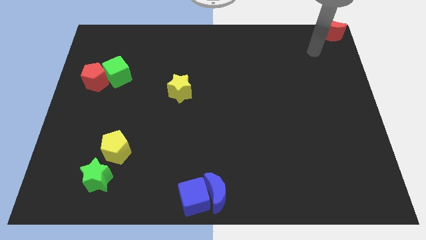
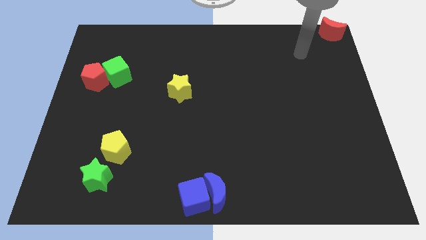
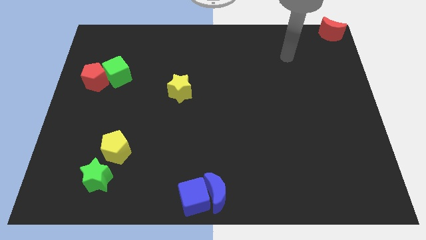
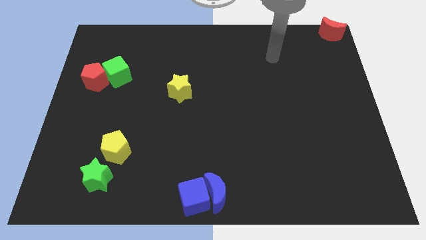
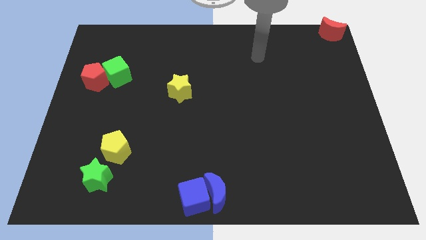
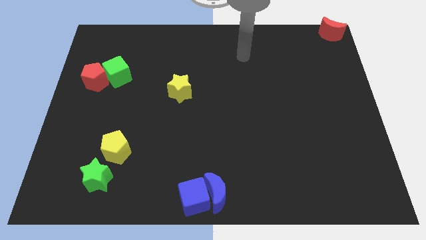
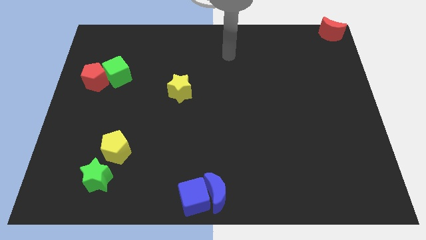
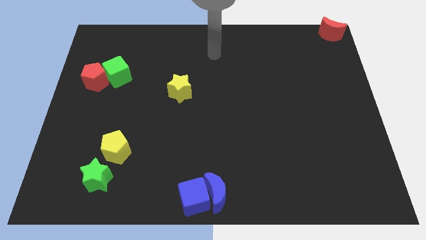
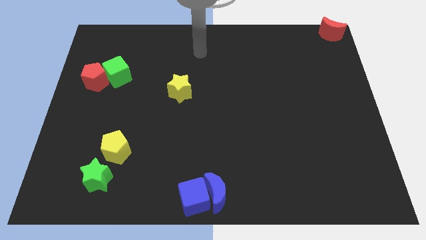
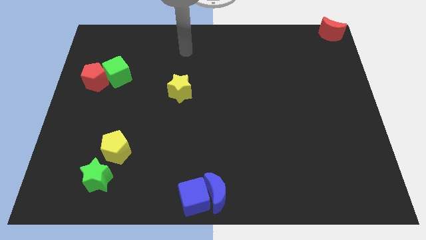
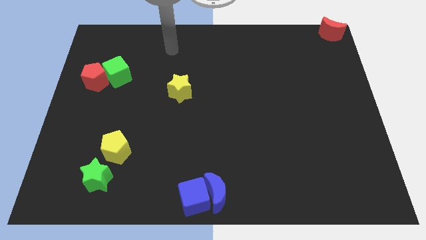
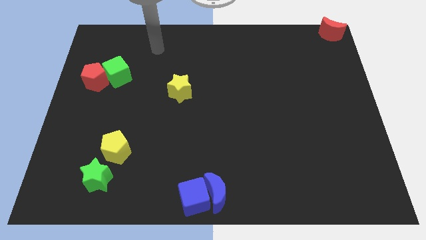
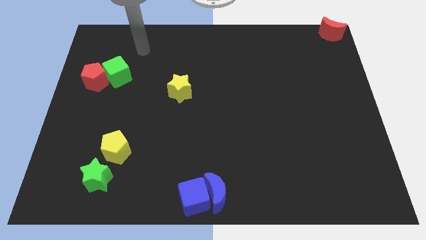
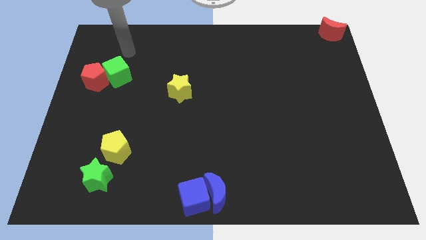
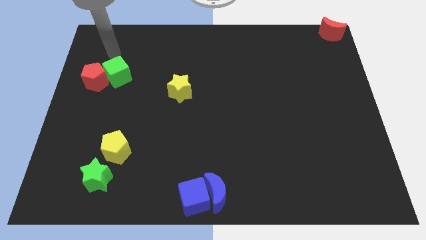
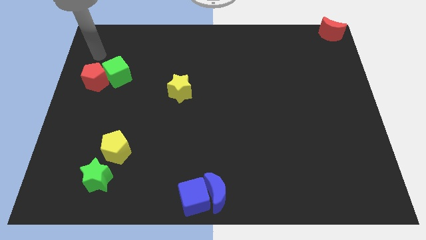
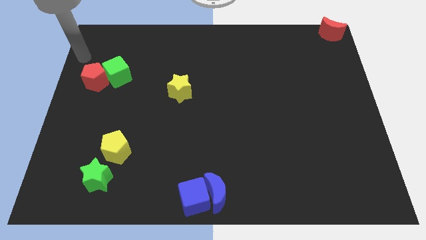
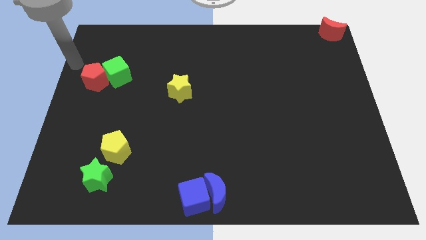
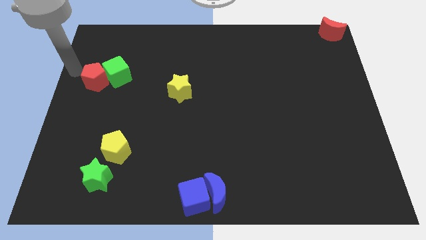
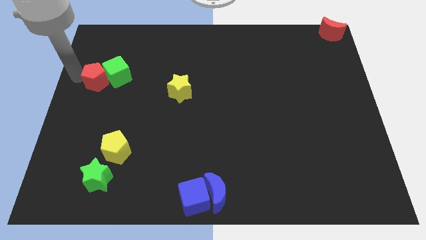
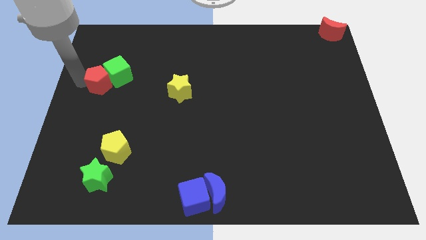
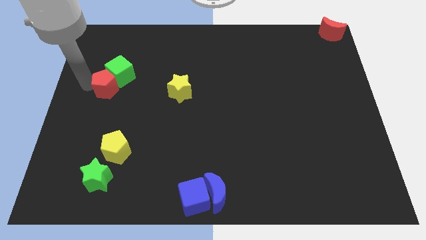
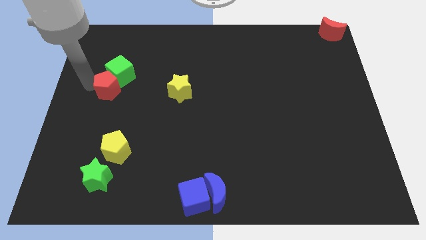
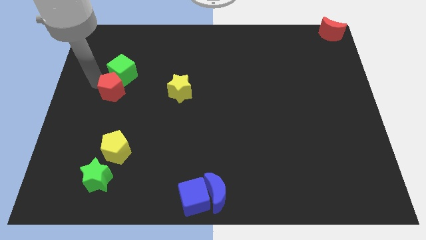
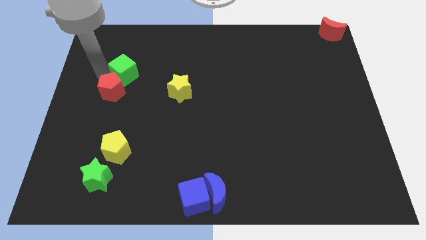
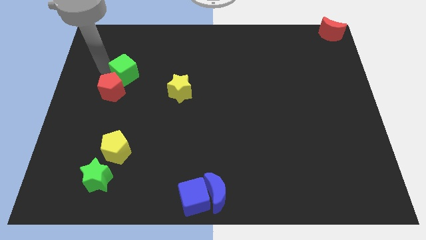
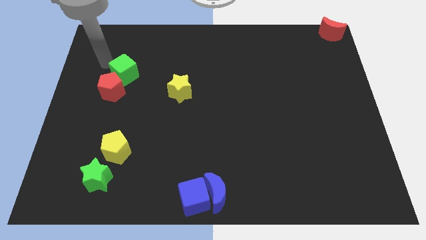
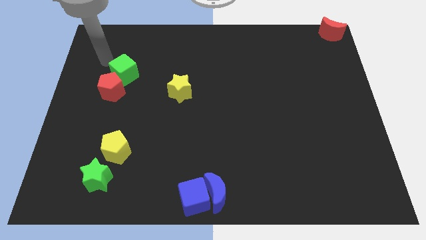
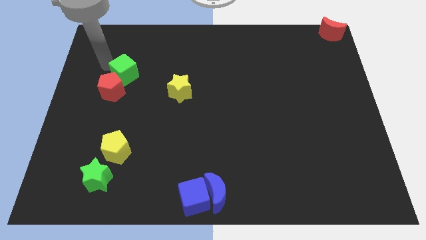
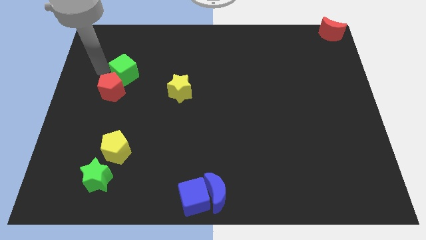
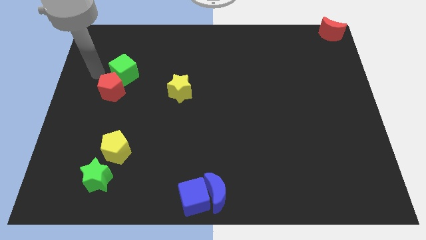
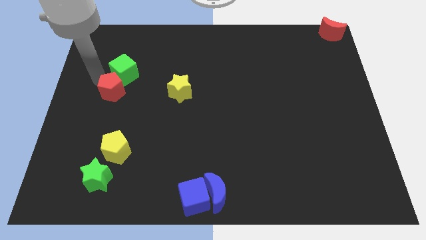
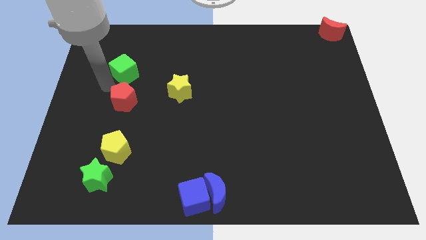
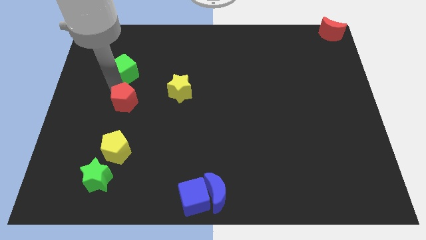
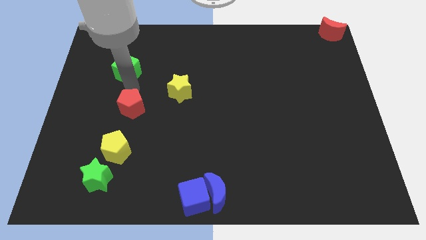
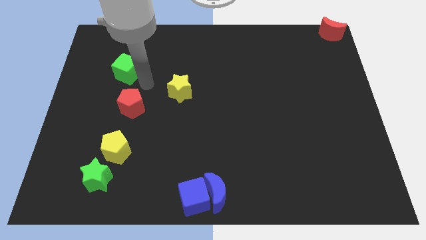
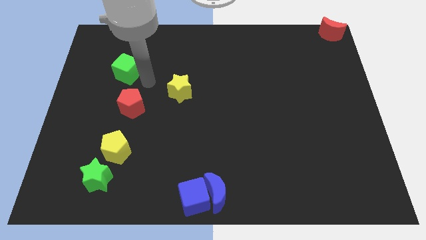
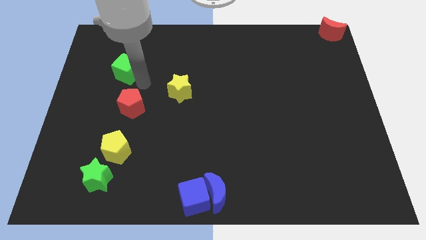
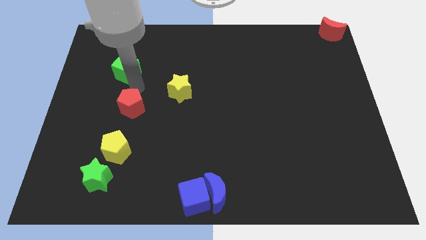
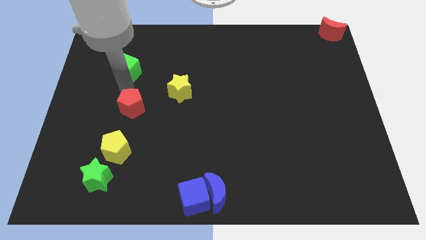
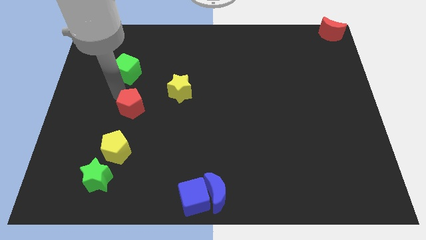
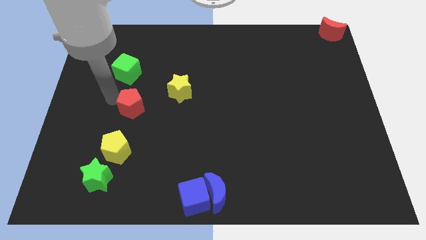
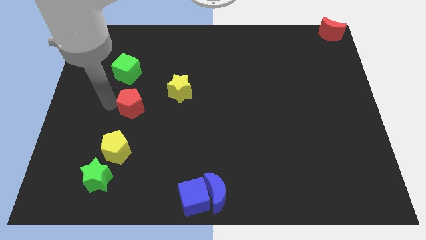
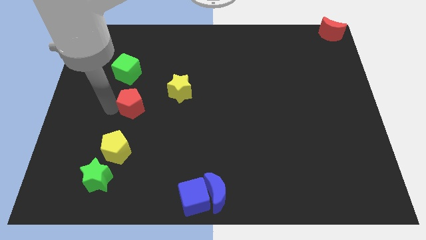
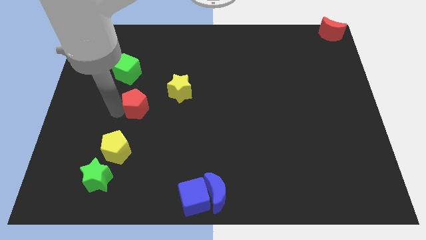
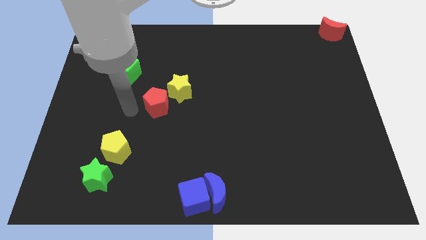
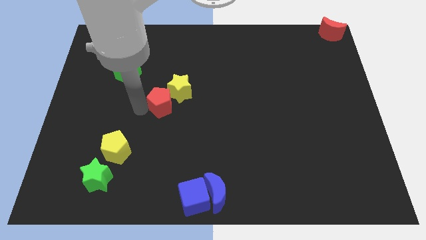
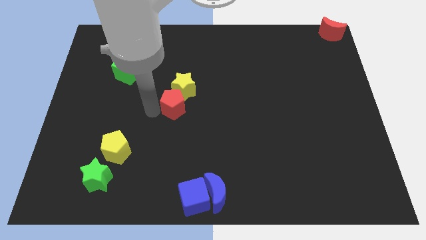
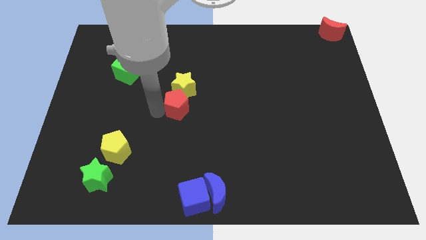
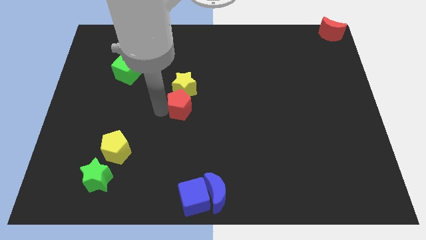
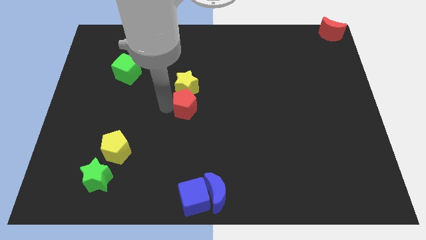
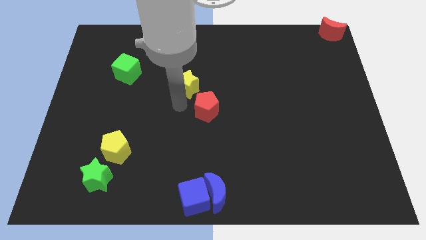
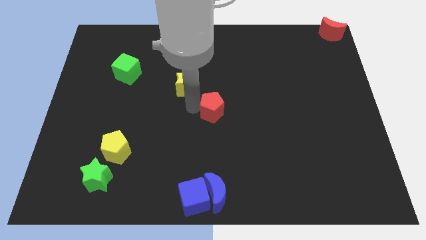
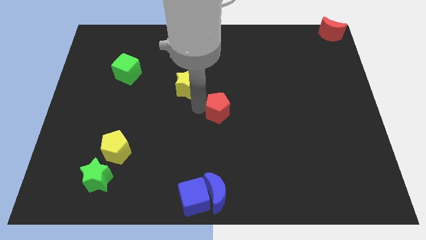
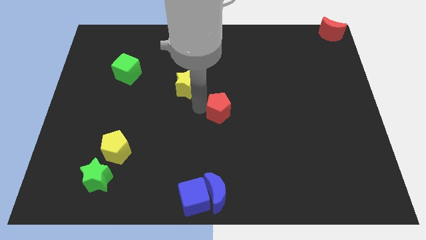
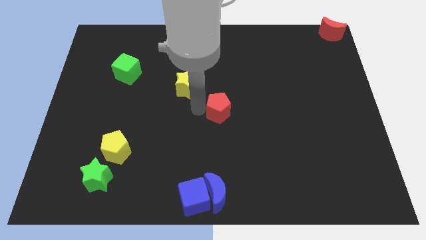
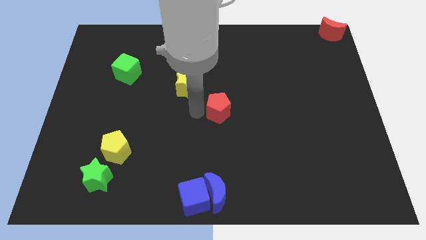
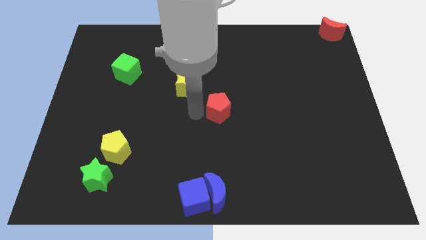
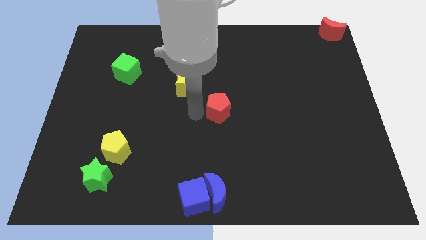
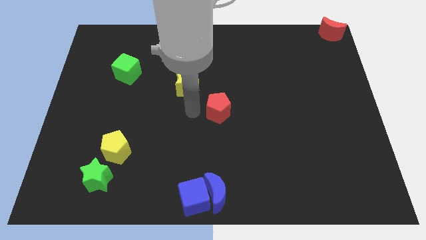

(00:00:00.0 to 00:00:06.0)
place the red pentagon vertically above the blue crescent

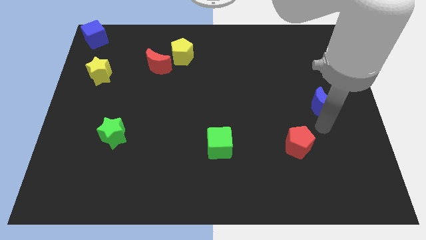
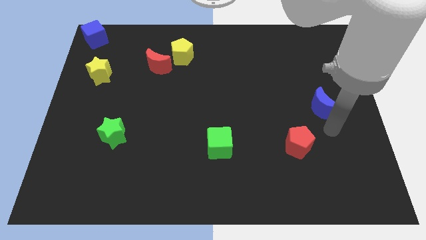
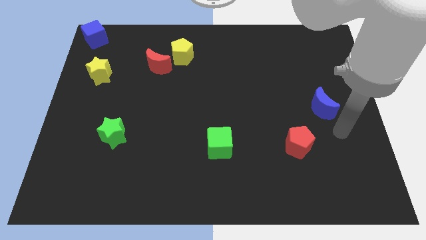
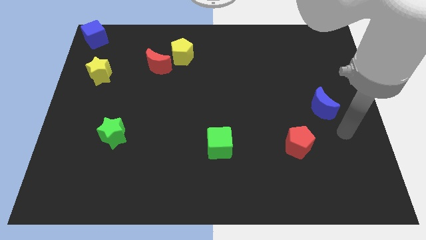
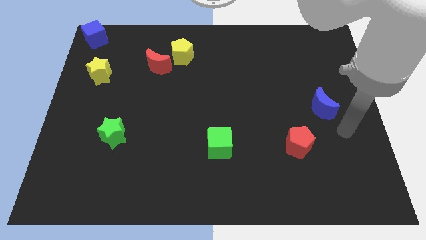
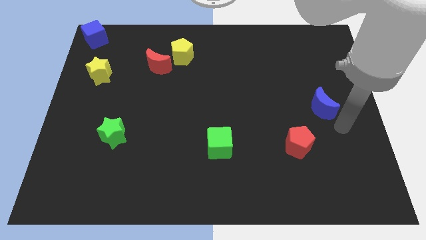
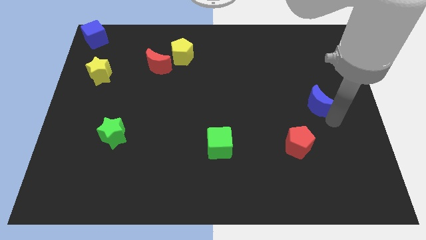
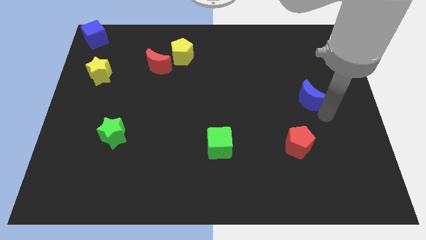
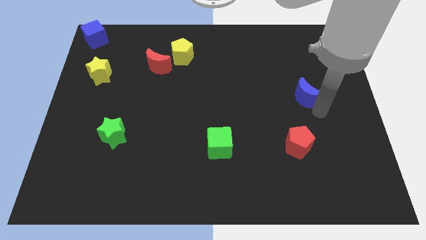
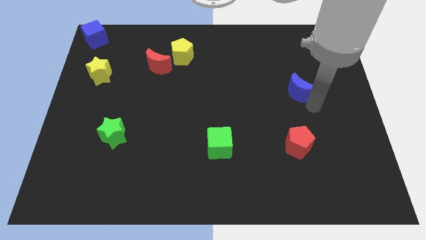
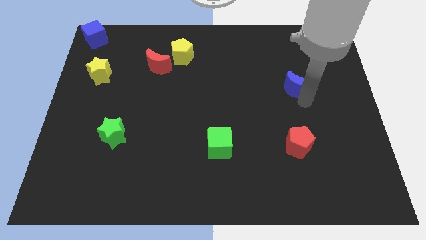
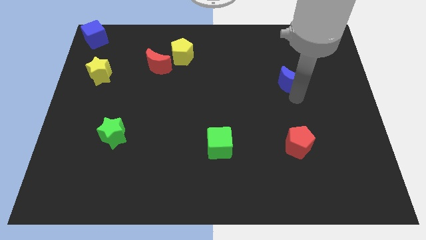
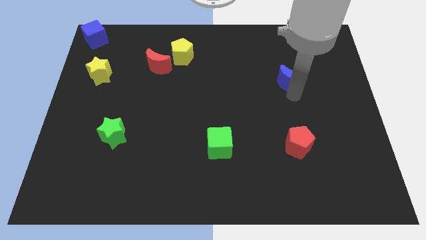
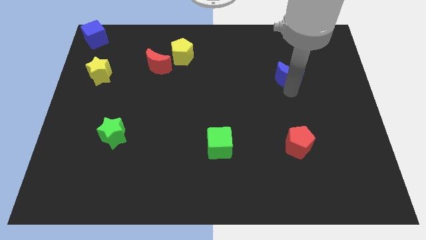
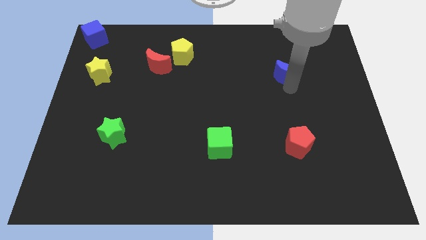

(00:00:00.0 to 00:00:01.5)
push the blue moon slightly to the top of the board

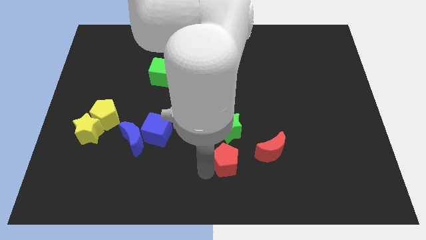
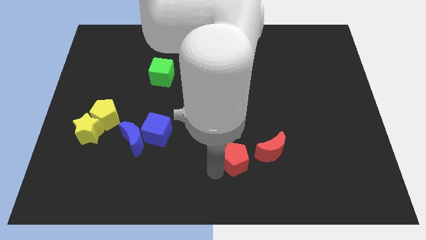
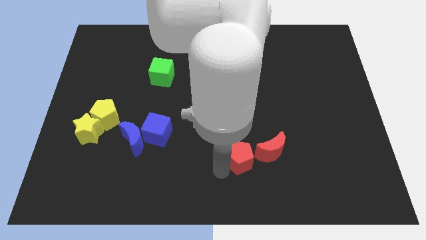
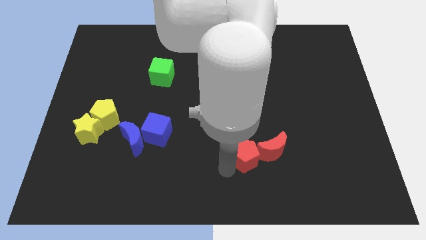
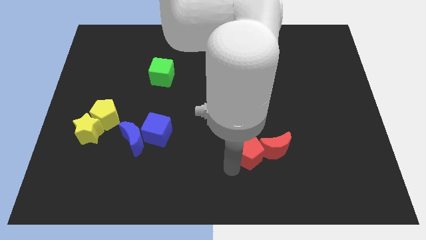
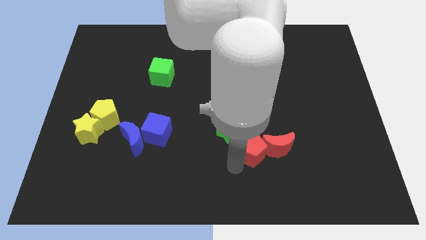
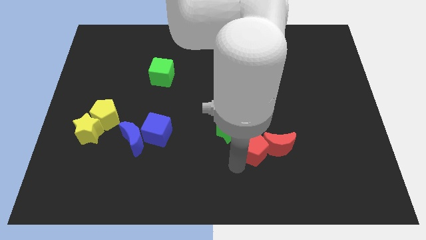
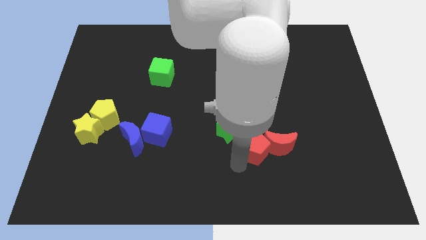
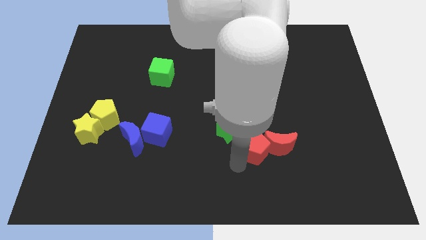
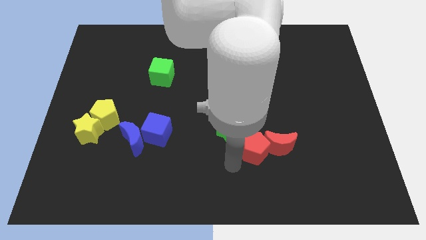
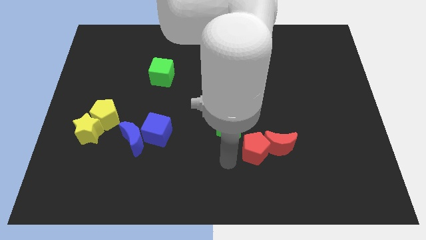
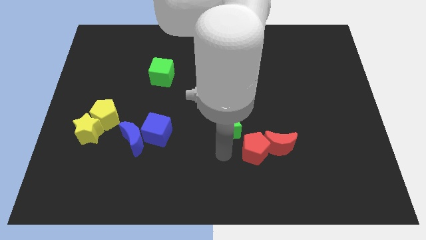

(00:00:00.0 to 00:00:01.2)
push red pentagon towards the red crescent

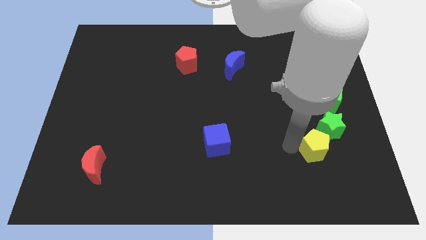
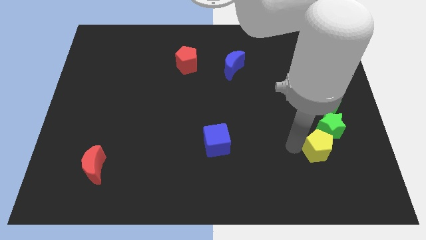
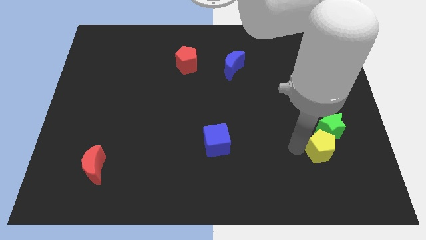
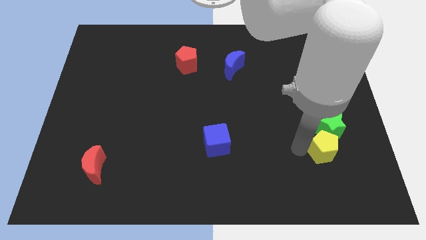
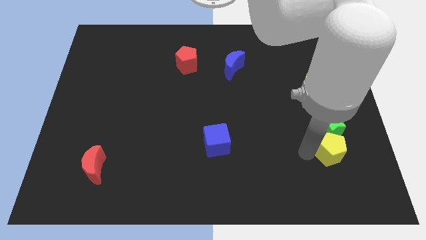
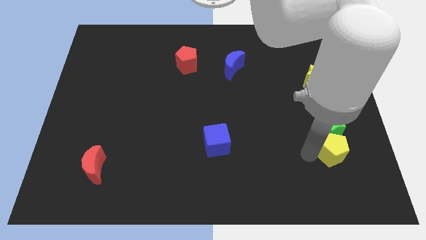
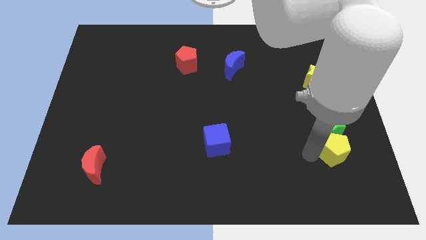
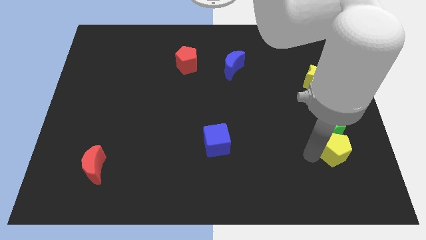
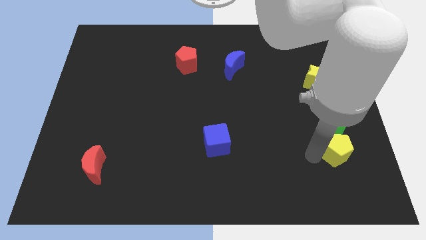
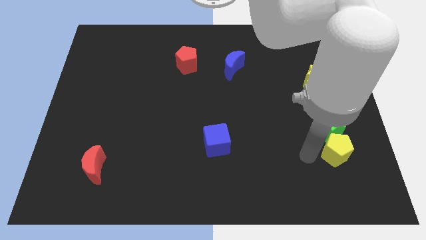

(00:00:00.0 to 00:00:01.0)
push the yellow pentagon to the bottom of green star
